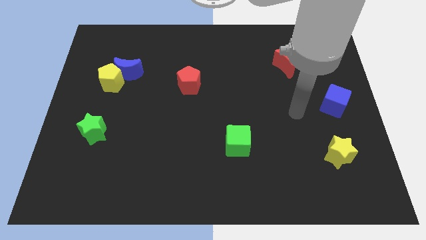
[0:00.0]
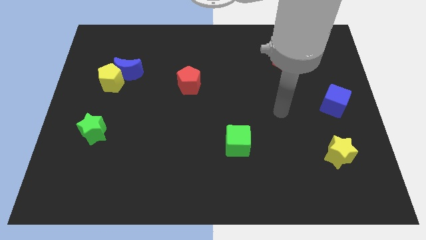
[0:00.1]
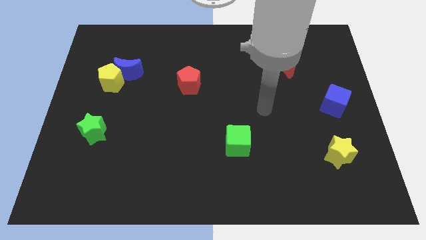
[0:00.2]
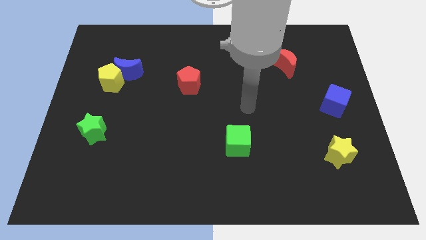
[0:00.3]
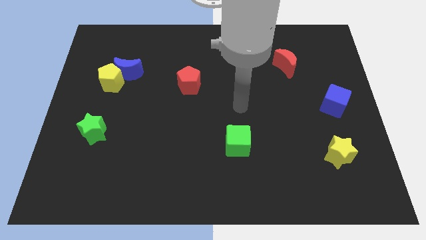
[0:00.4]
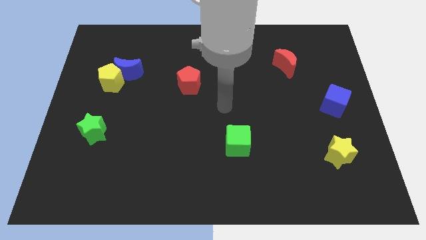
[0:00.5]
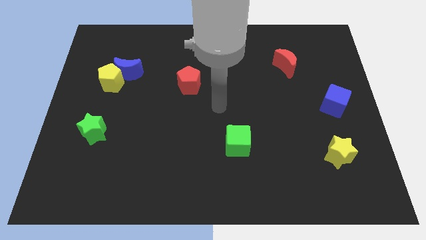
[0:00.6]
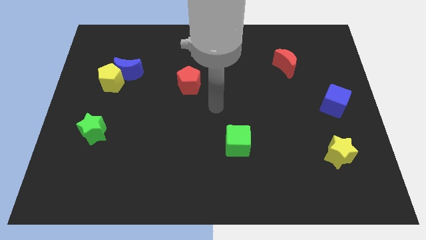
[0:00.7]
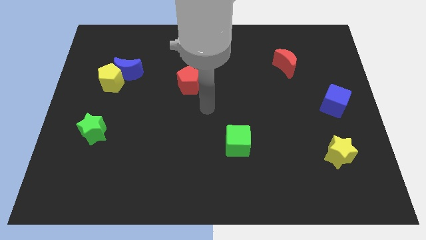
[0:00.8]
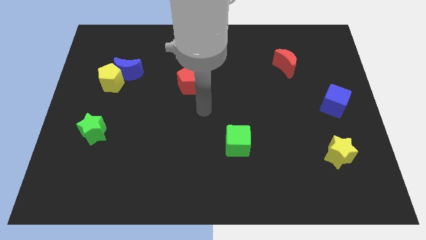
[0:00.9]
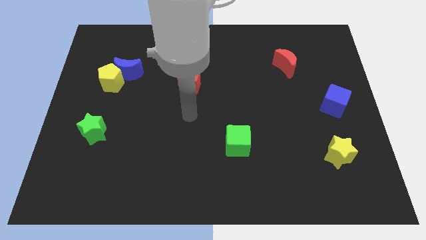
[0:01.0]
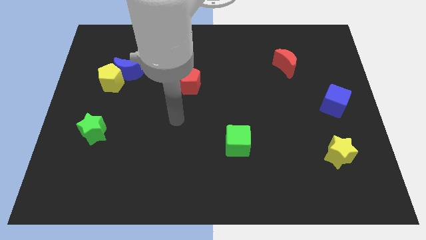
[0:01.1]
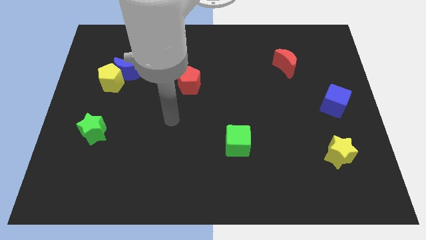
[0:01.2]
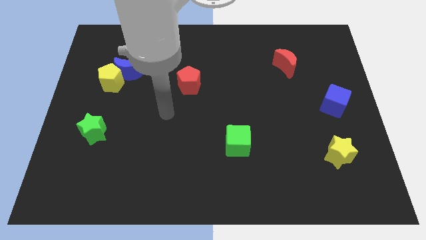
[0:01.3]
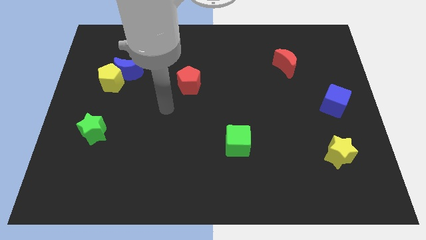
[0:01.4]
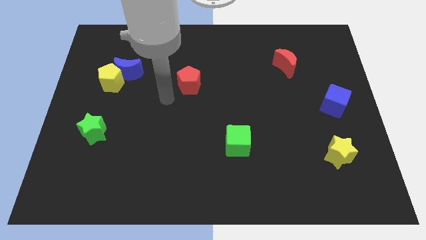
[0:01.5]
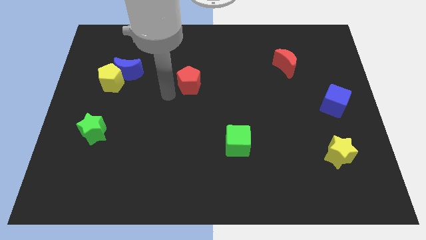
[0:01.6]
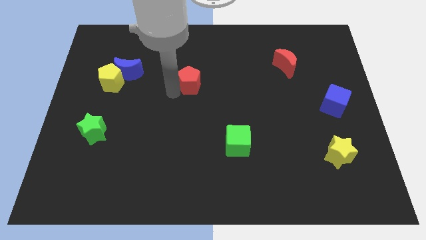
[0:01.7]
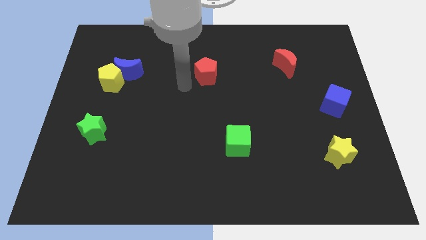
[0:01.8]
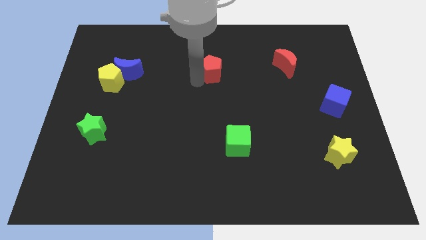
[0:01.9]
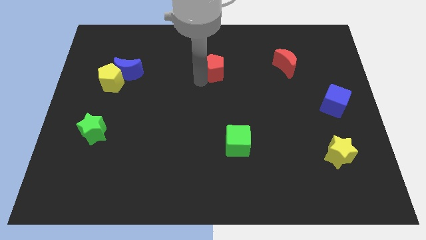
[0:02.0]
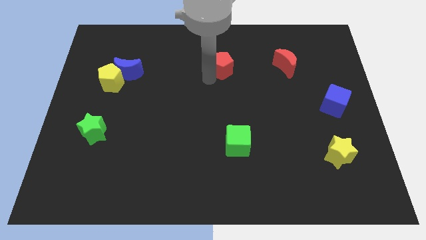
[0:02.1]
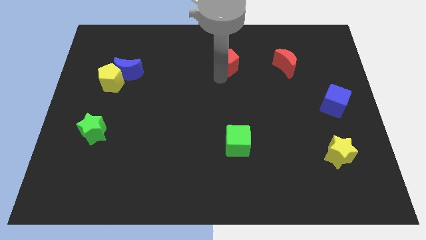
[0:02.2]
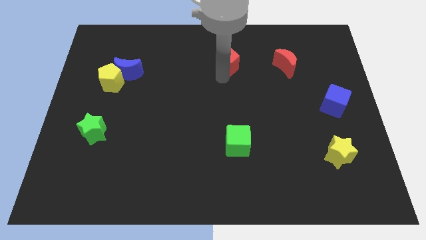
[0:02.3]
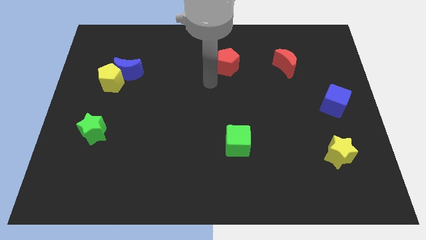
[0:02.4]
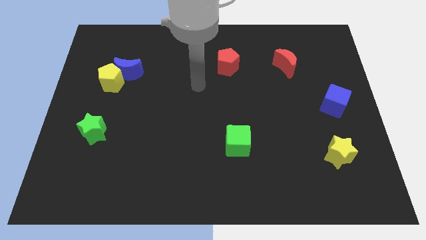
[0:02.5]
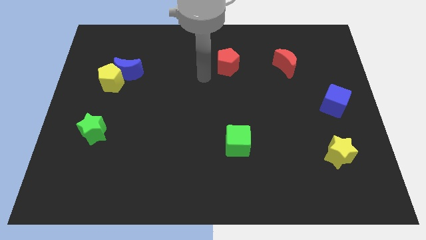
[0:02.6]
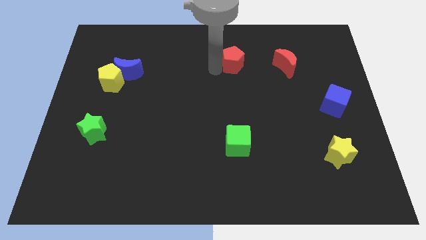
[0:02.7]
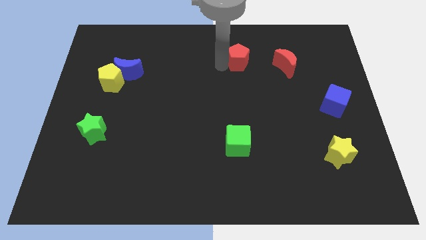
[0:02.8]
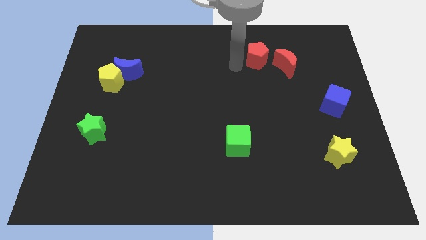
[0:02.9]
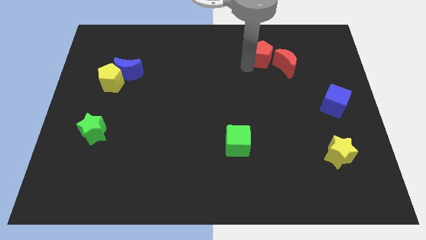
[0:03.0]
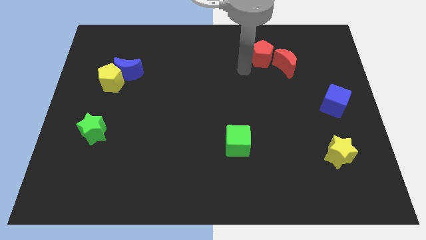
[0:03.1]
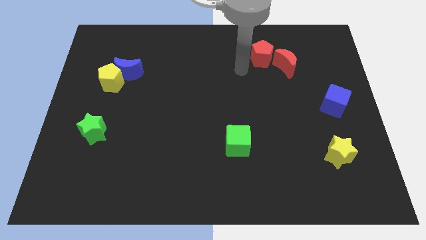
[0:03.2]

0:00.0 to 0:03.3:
move the red pentagon near red moon

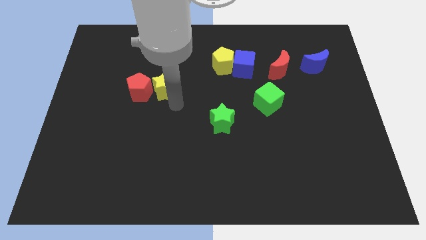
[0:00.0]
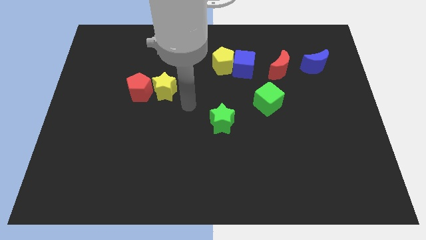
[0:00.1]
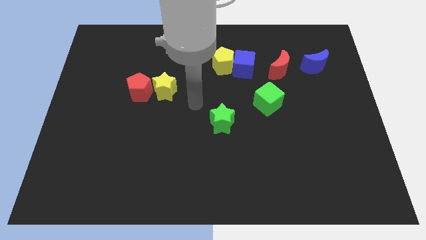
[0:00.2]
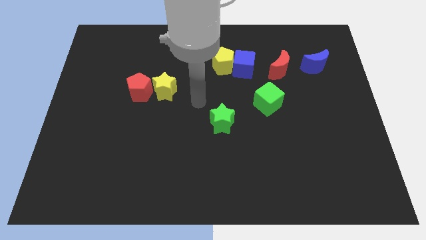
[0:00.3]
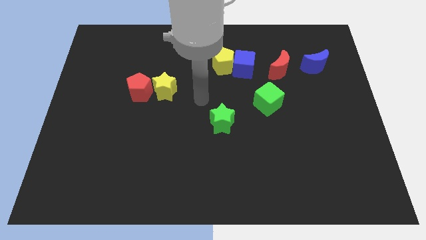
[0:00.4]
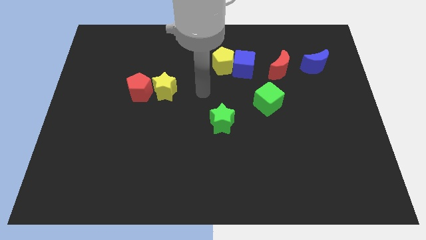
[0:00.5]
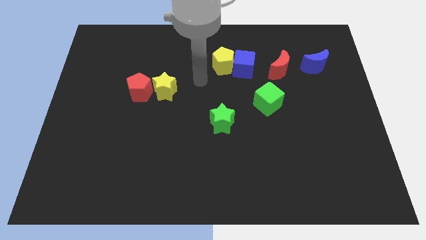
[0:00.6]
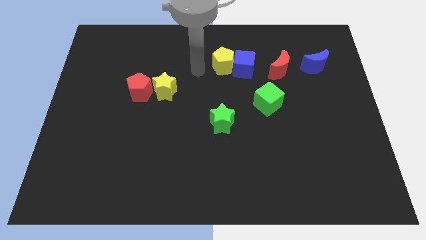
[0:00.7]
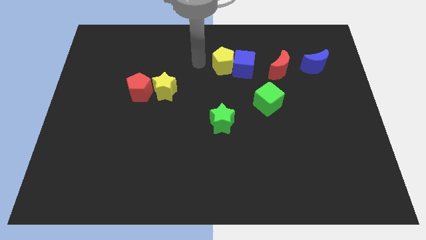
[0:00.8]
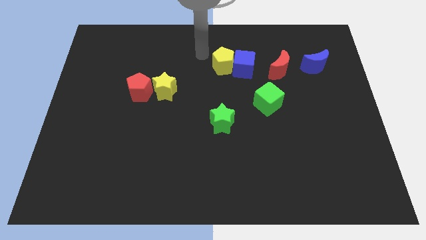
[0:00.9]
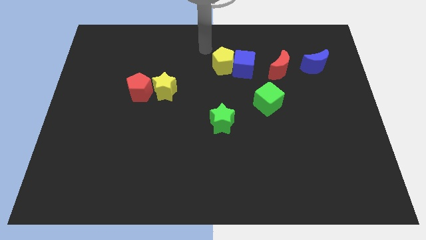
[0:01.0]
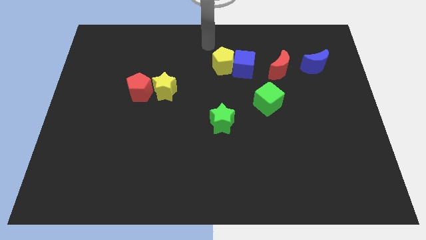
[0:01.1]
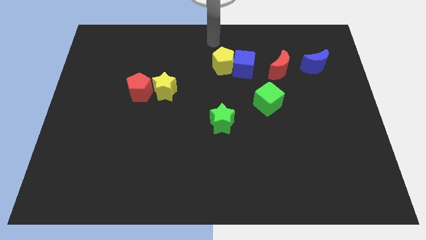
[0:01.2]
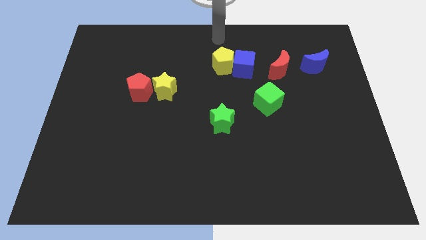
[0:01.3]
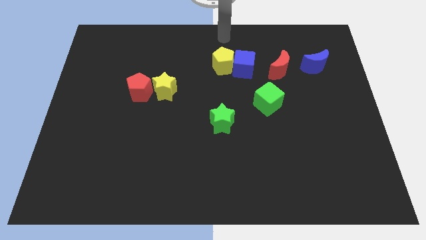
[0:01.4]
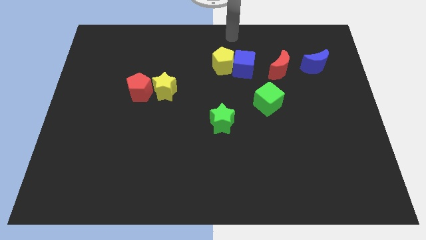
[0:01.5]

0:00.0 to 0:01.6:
point your arm at the top side of the yellow pentagon

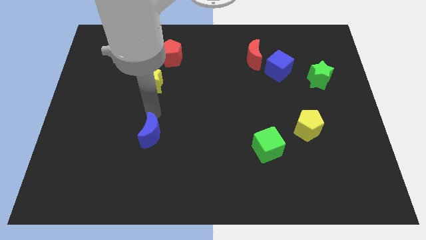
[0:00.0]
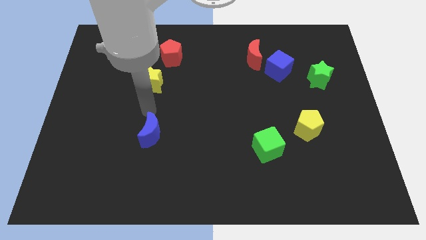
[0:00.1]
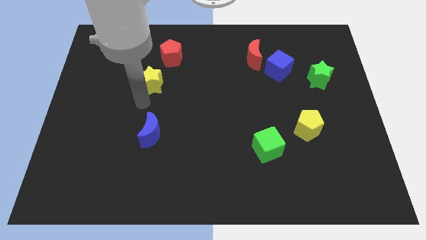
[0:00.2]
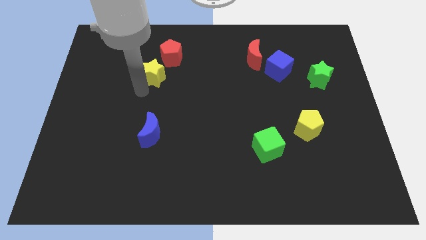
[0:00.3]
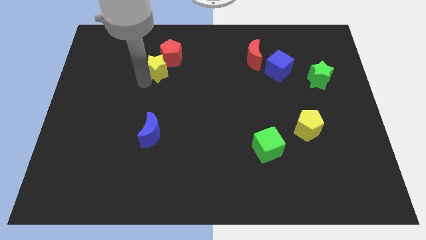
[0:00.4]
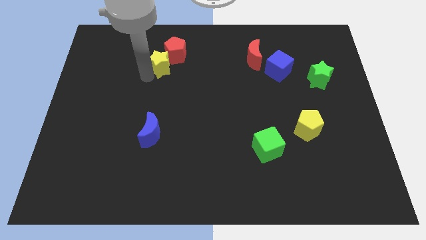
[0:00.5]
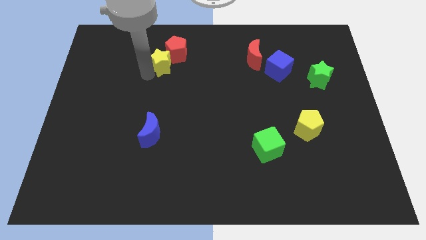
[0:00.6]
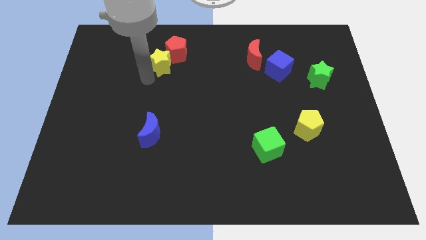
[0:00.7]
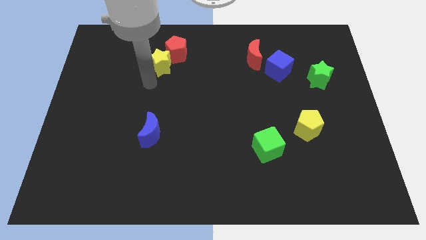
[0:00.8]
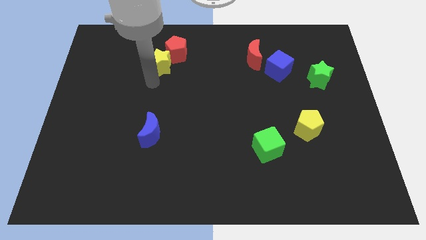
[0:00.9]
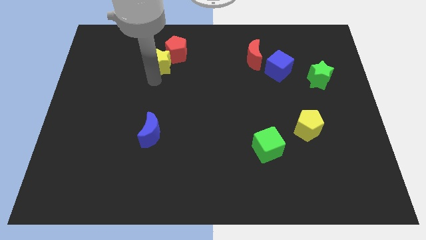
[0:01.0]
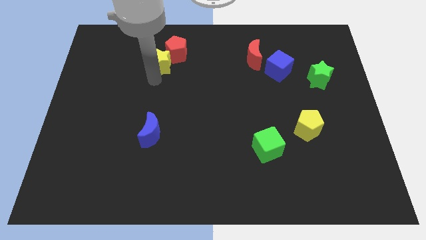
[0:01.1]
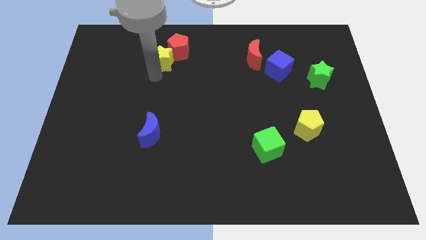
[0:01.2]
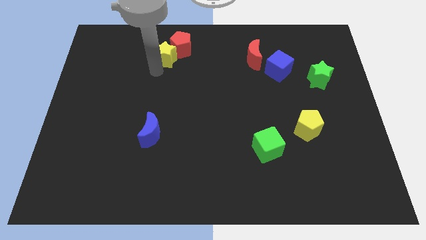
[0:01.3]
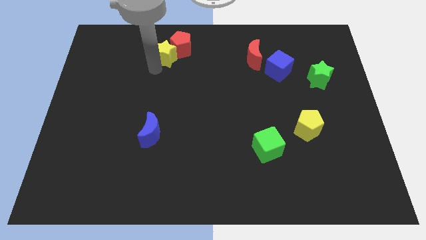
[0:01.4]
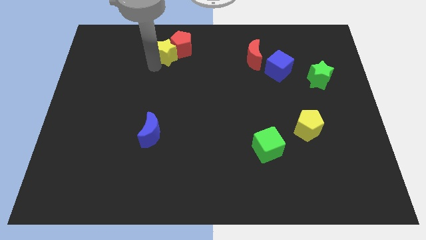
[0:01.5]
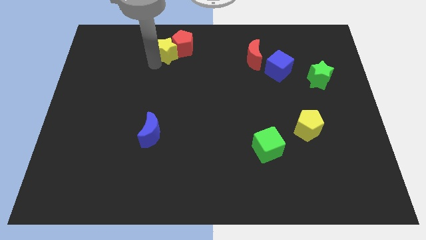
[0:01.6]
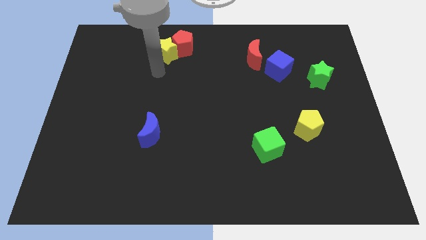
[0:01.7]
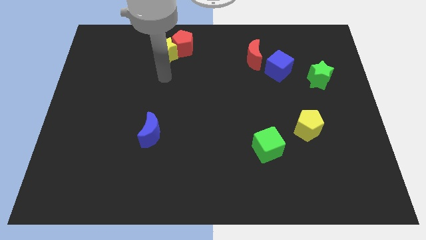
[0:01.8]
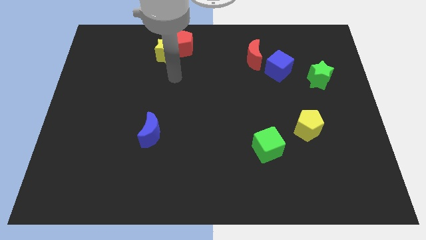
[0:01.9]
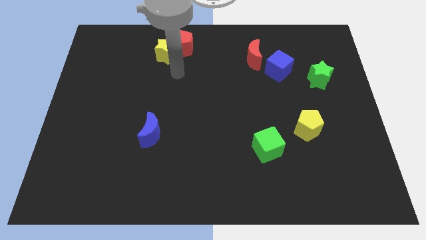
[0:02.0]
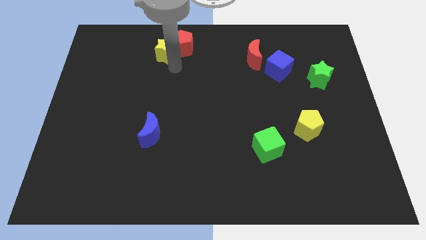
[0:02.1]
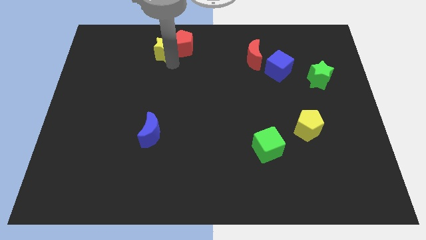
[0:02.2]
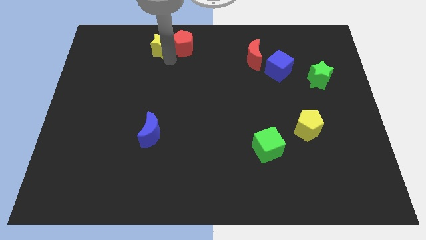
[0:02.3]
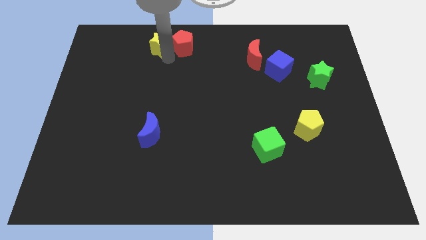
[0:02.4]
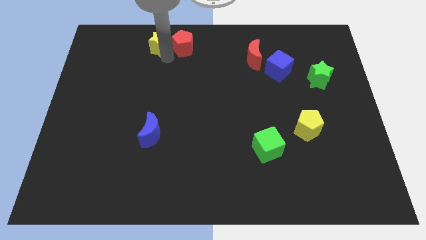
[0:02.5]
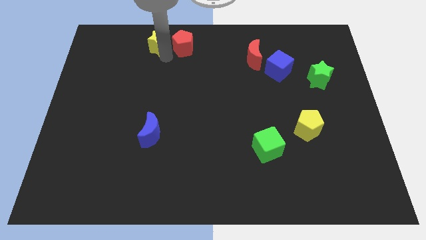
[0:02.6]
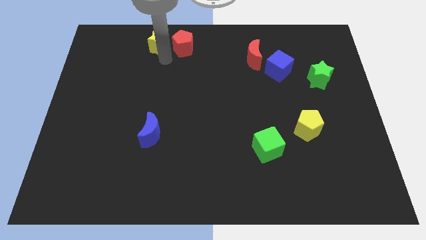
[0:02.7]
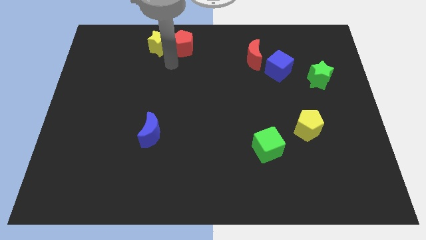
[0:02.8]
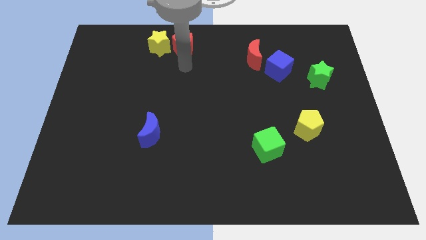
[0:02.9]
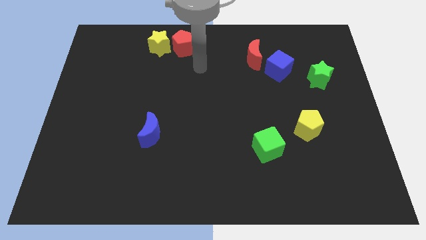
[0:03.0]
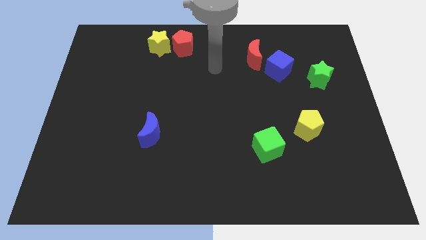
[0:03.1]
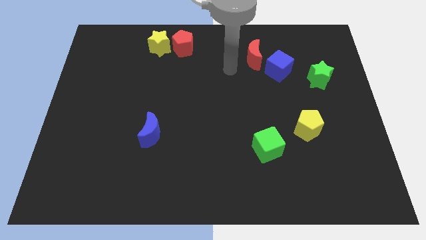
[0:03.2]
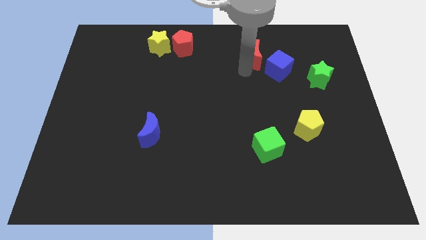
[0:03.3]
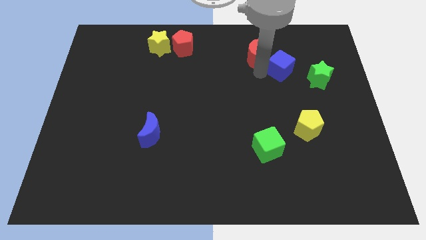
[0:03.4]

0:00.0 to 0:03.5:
put the yellow star on the left side of the red pentagon

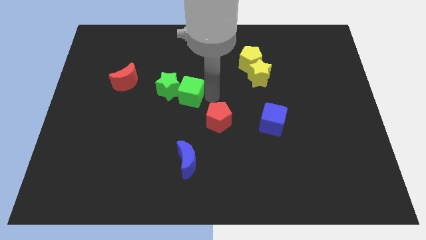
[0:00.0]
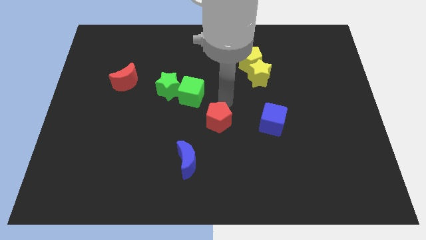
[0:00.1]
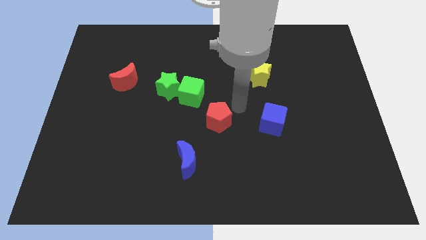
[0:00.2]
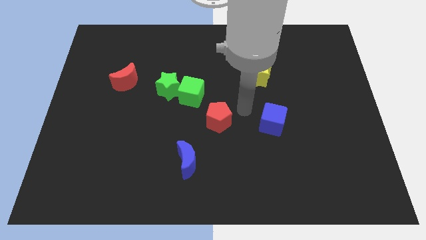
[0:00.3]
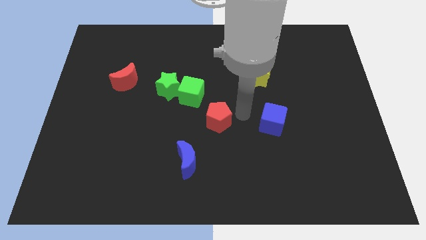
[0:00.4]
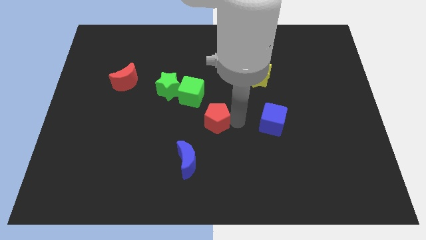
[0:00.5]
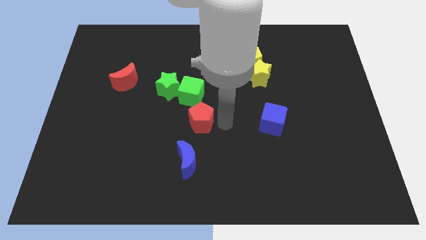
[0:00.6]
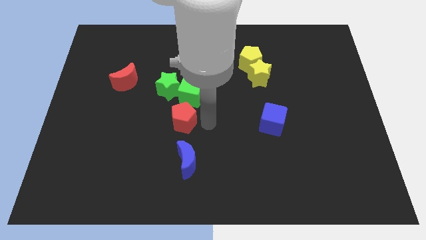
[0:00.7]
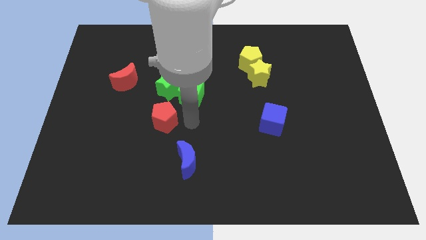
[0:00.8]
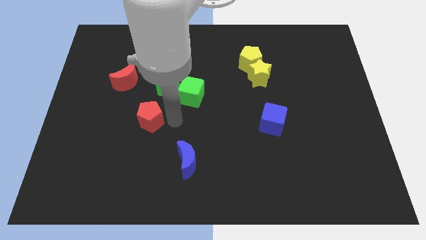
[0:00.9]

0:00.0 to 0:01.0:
put the red pentagon below the green star
